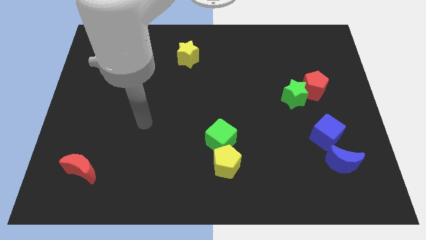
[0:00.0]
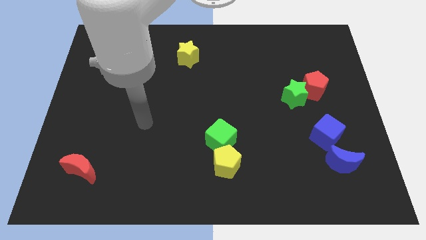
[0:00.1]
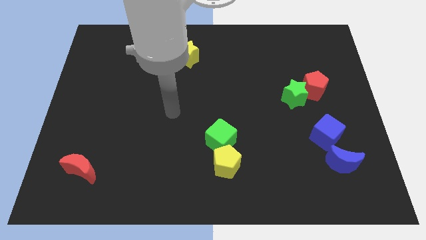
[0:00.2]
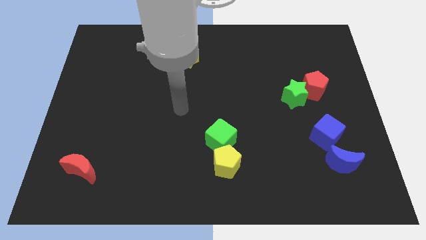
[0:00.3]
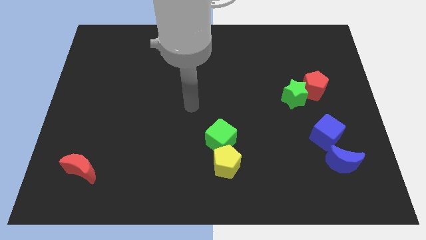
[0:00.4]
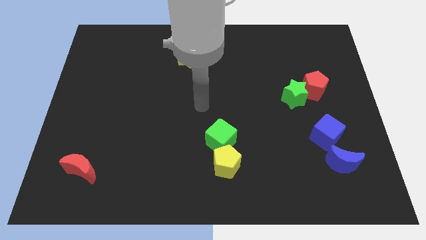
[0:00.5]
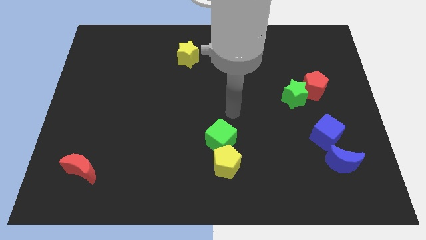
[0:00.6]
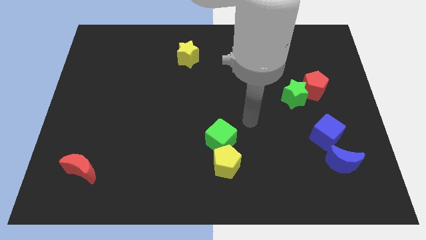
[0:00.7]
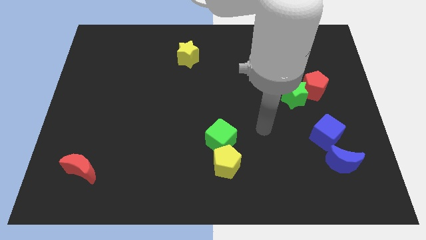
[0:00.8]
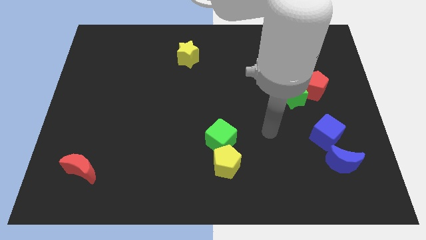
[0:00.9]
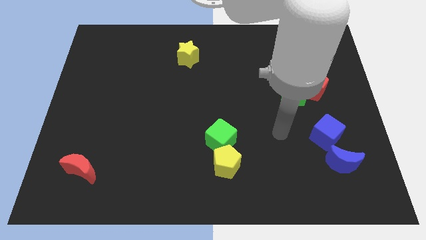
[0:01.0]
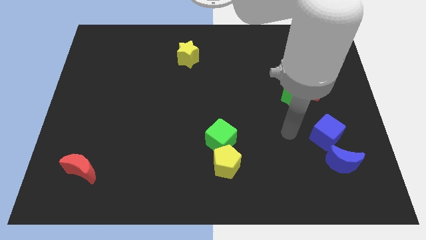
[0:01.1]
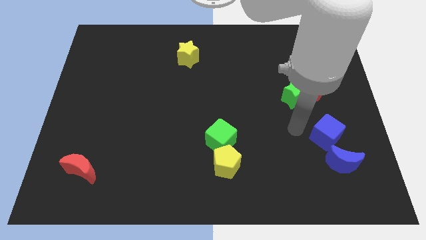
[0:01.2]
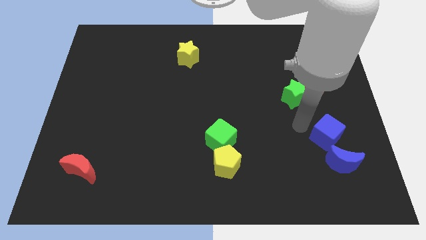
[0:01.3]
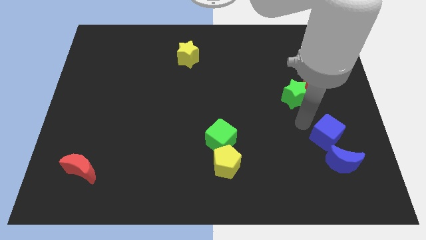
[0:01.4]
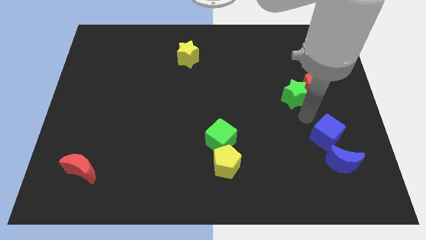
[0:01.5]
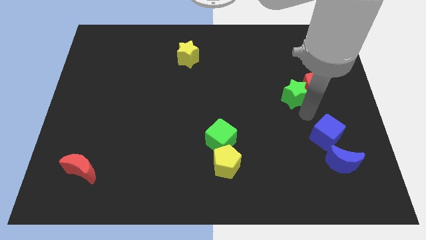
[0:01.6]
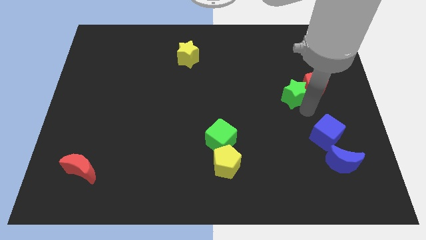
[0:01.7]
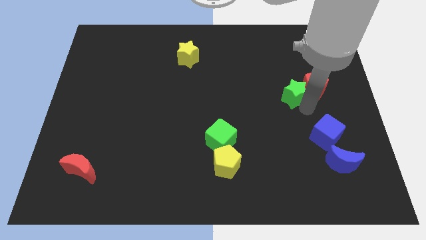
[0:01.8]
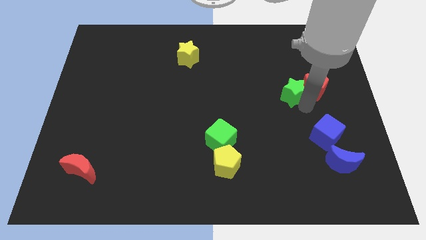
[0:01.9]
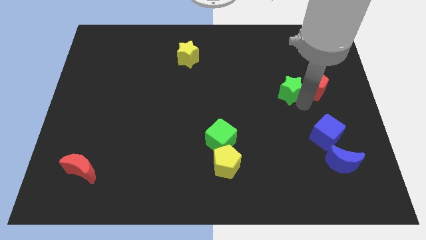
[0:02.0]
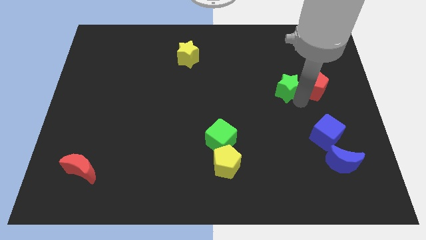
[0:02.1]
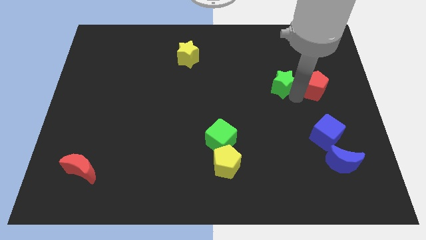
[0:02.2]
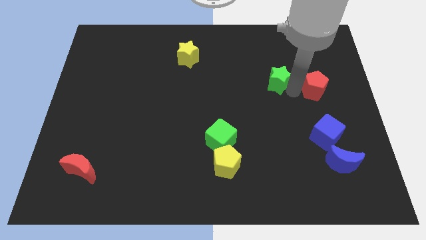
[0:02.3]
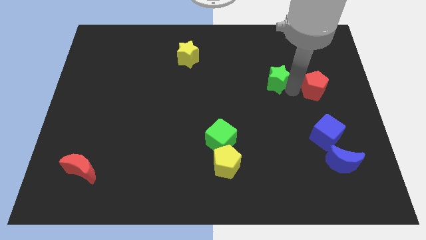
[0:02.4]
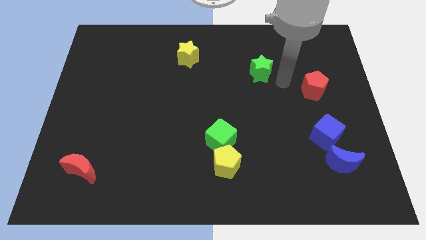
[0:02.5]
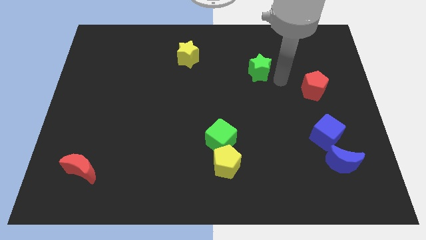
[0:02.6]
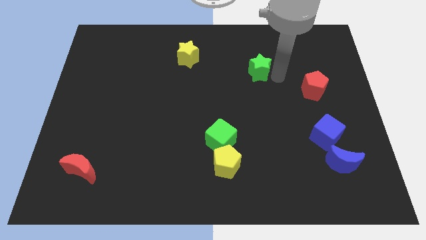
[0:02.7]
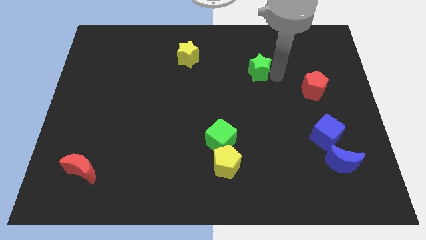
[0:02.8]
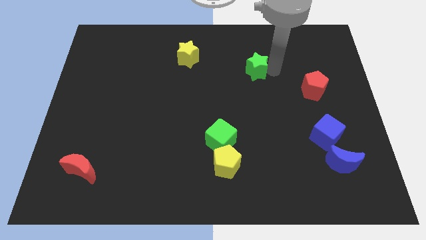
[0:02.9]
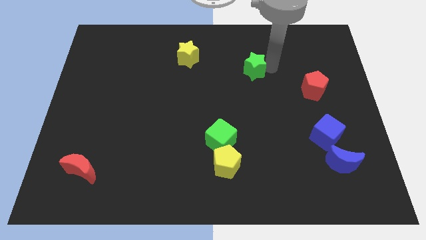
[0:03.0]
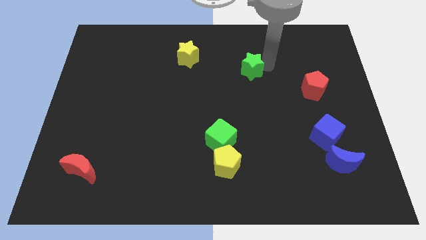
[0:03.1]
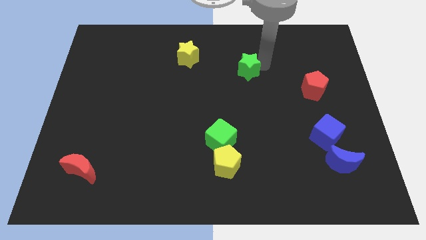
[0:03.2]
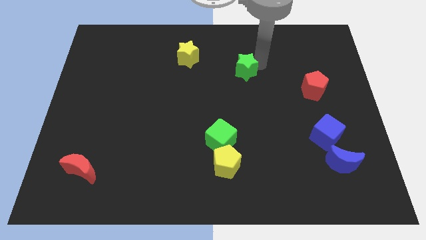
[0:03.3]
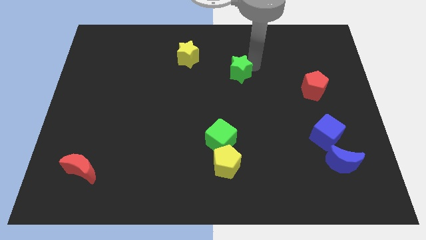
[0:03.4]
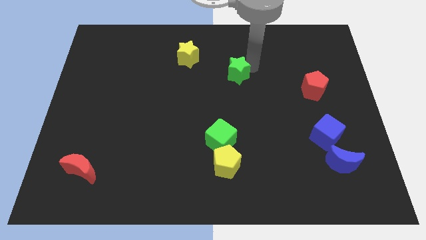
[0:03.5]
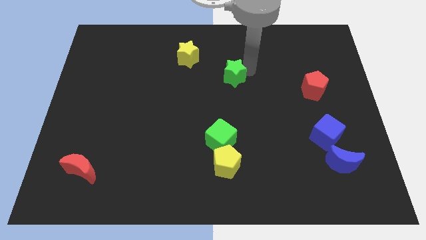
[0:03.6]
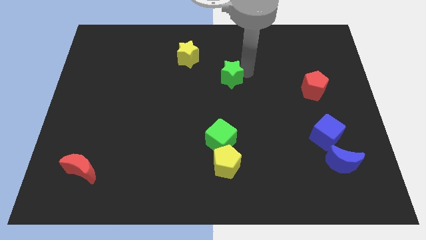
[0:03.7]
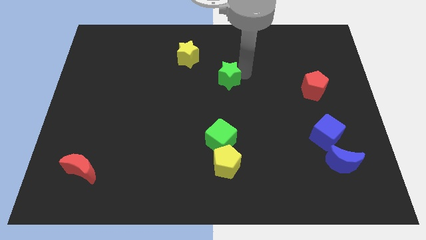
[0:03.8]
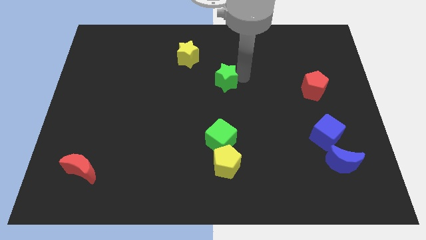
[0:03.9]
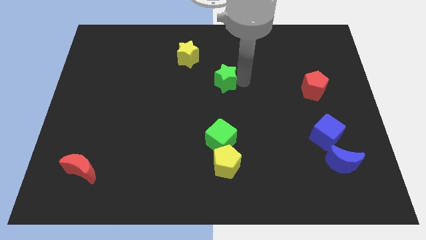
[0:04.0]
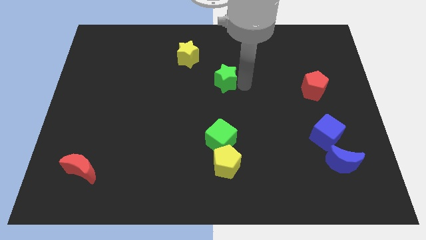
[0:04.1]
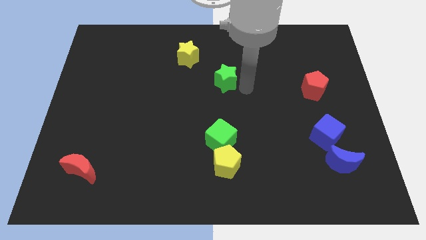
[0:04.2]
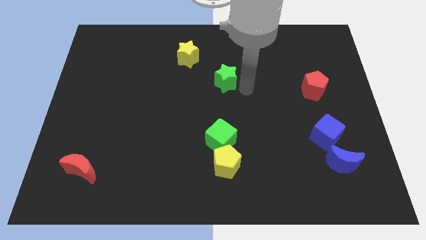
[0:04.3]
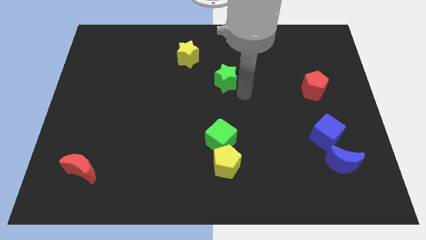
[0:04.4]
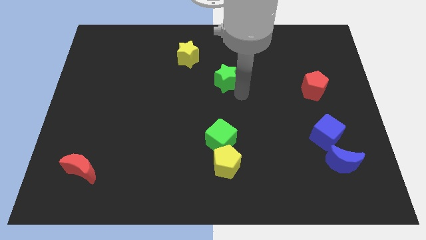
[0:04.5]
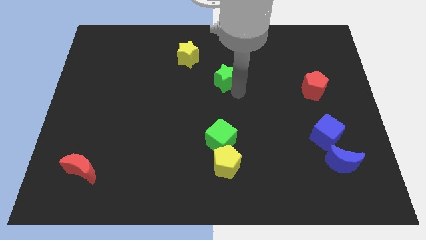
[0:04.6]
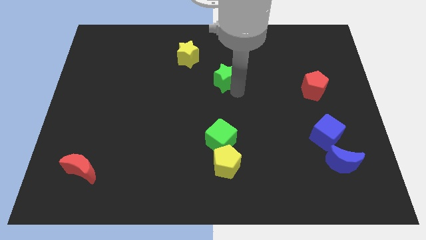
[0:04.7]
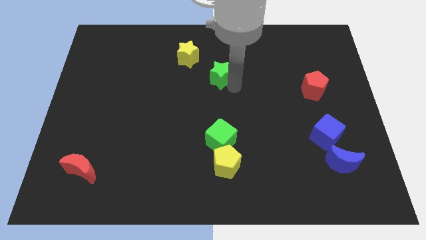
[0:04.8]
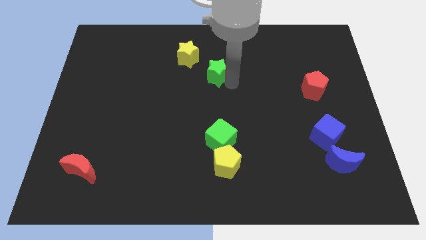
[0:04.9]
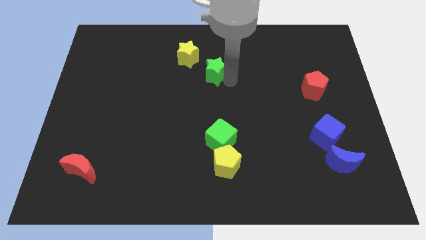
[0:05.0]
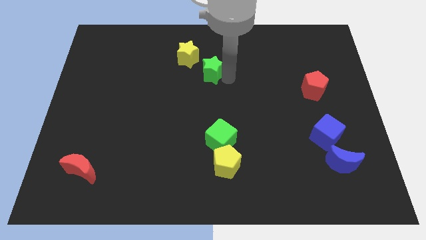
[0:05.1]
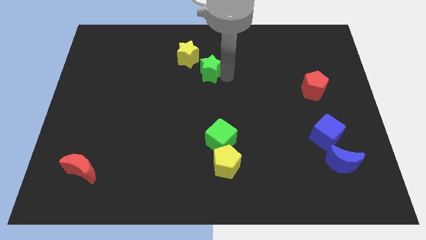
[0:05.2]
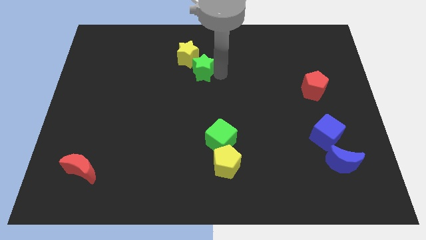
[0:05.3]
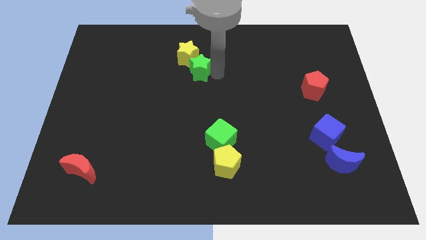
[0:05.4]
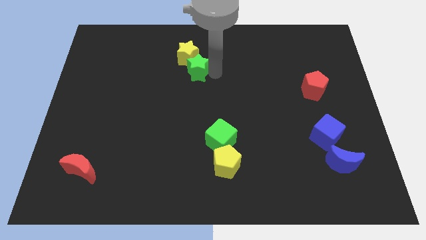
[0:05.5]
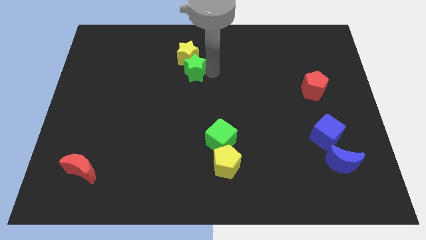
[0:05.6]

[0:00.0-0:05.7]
push the green star close to the yellow star

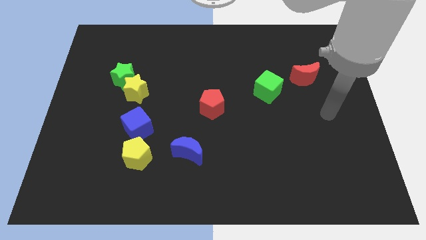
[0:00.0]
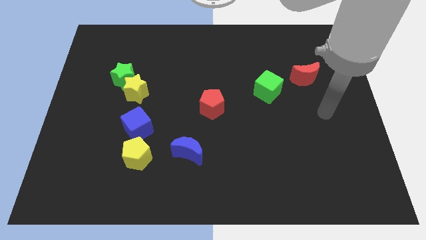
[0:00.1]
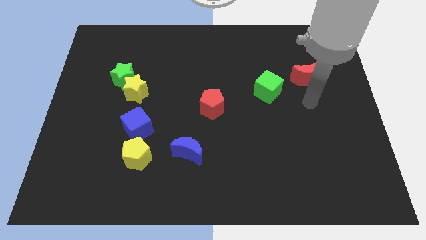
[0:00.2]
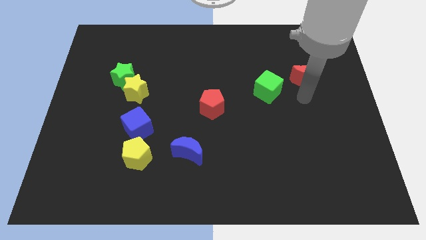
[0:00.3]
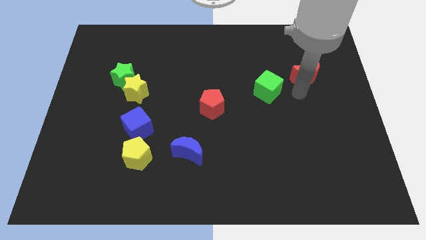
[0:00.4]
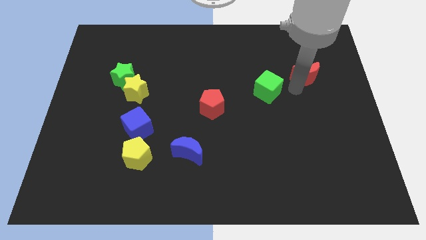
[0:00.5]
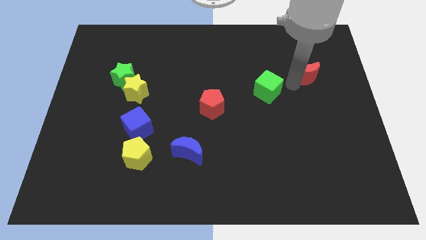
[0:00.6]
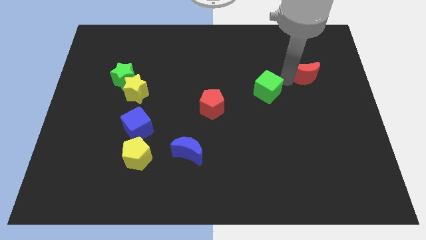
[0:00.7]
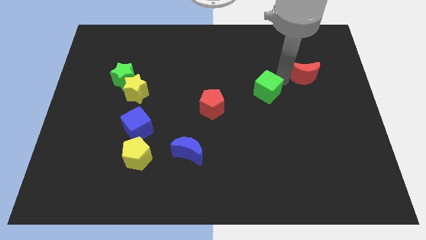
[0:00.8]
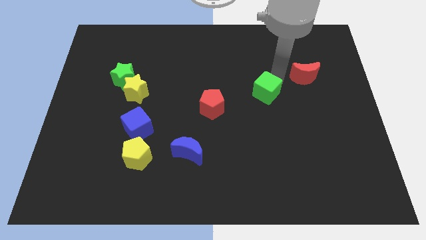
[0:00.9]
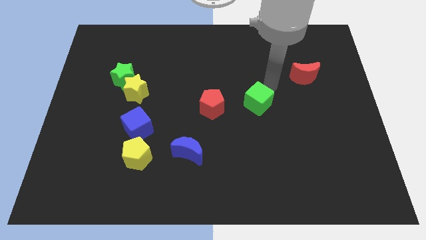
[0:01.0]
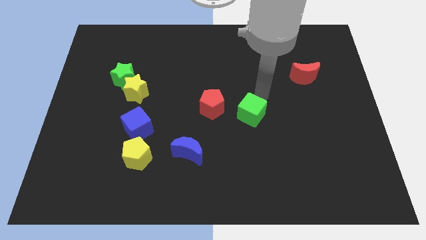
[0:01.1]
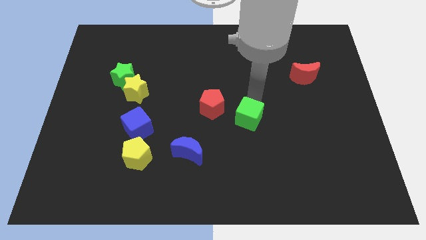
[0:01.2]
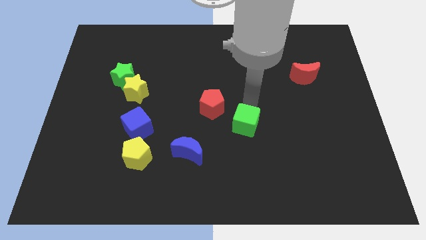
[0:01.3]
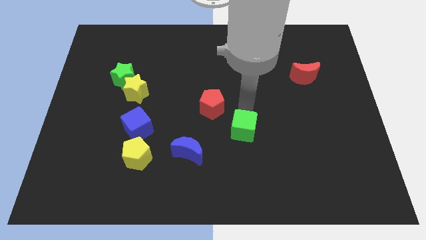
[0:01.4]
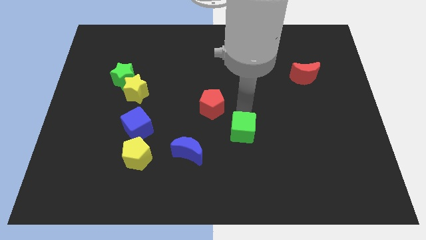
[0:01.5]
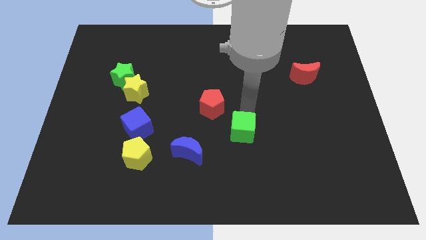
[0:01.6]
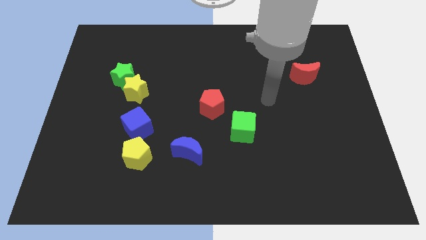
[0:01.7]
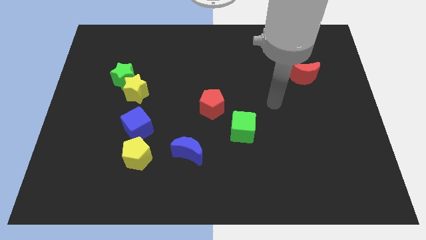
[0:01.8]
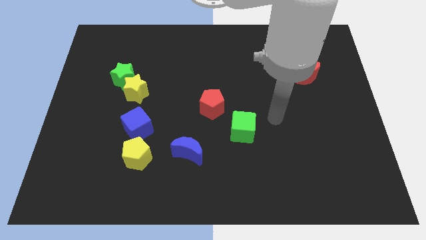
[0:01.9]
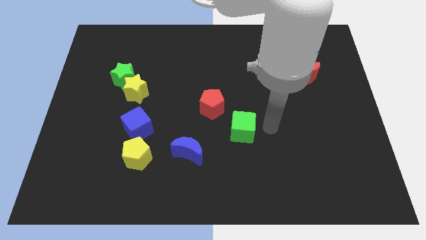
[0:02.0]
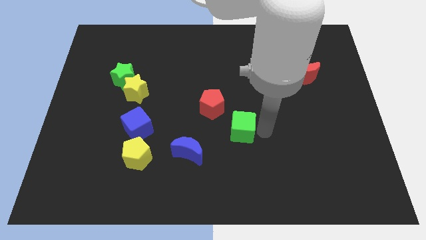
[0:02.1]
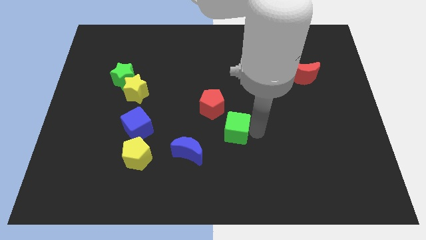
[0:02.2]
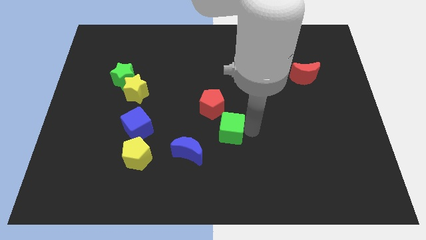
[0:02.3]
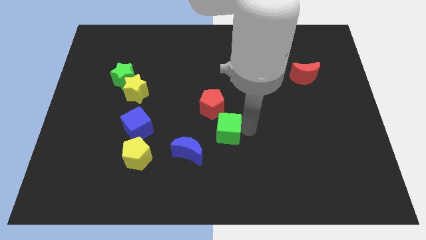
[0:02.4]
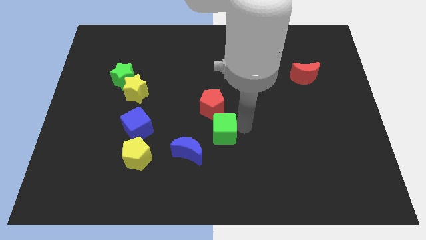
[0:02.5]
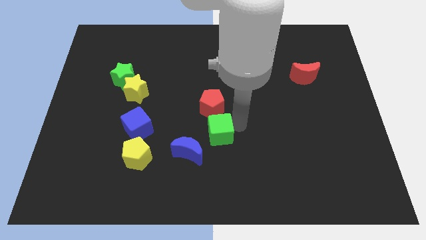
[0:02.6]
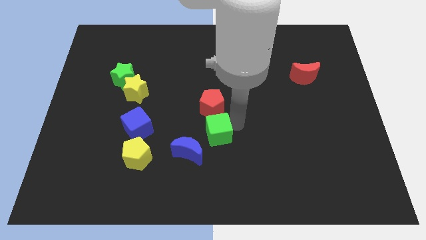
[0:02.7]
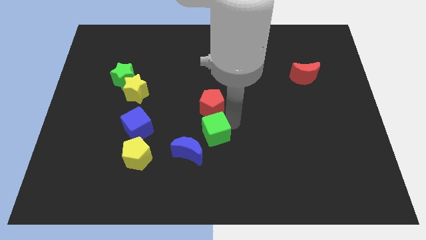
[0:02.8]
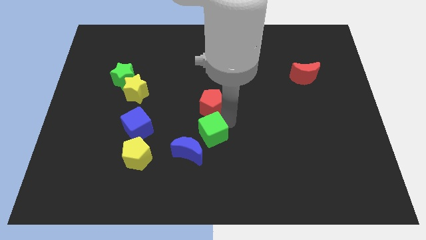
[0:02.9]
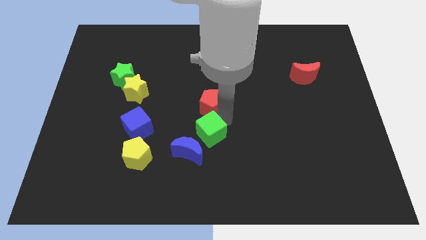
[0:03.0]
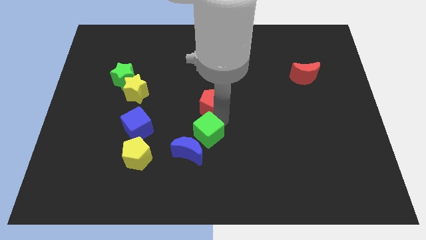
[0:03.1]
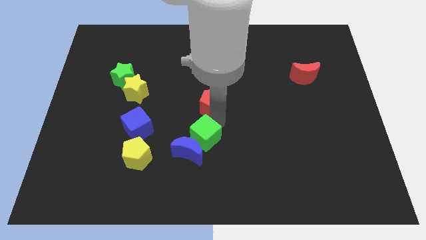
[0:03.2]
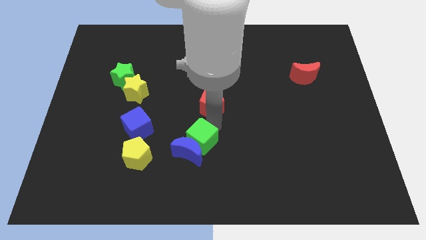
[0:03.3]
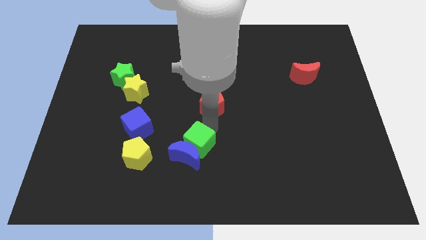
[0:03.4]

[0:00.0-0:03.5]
move the green cube next to the blue moon
